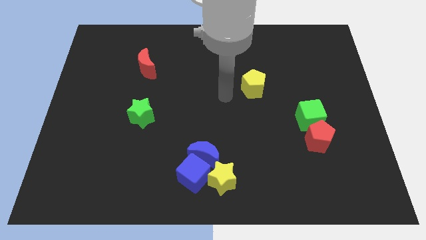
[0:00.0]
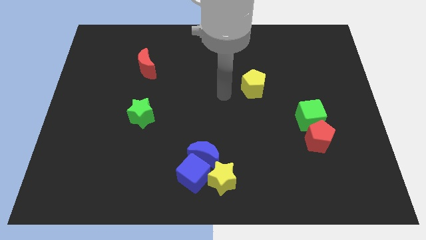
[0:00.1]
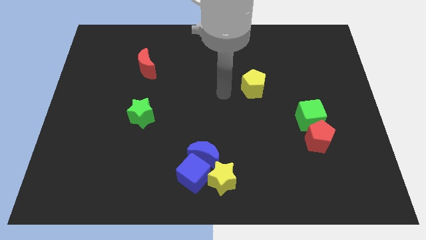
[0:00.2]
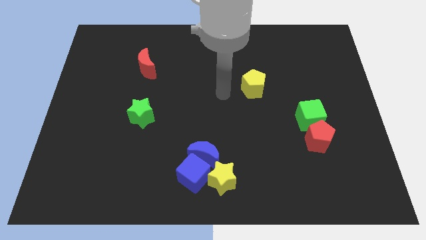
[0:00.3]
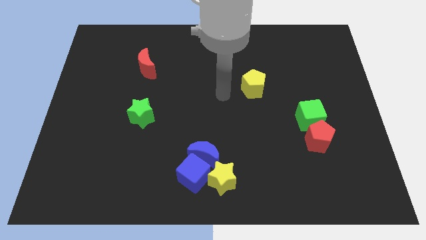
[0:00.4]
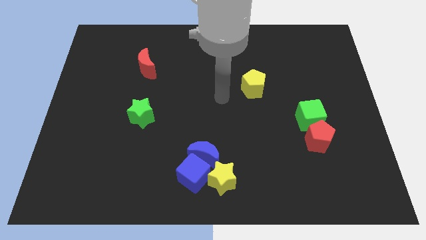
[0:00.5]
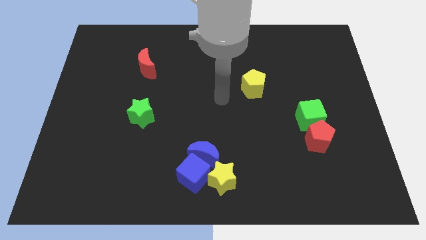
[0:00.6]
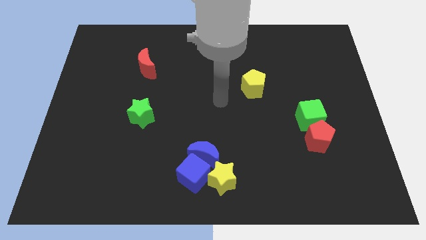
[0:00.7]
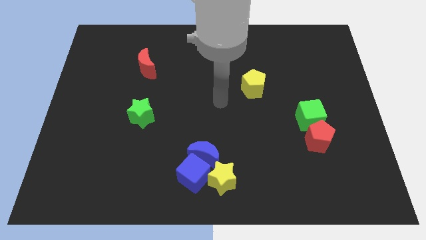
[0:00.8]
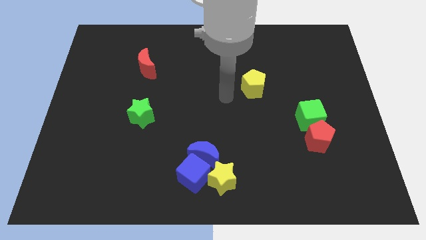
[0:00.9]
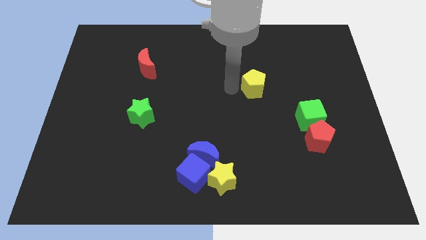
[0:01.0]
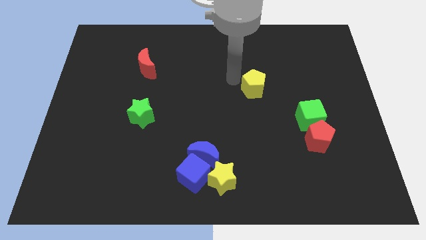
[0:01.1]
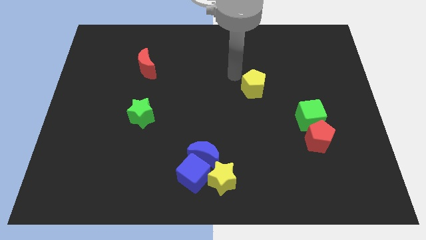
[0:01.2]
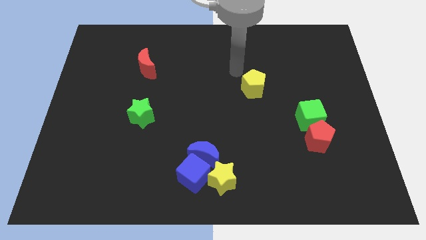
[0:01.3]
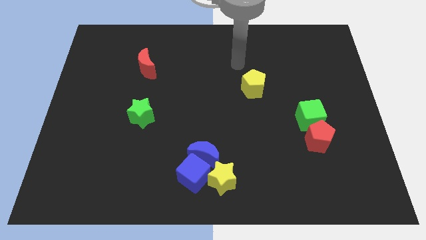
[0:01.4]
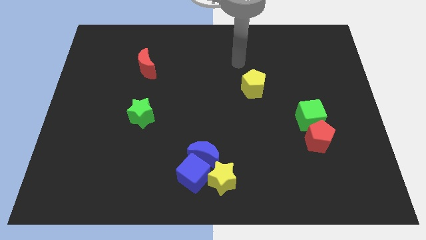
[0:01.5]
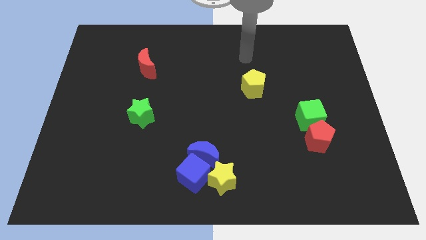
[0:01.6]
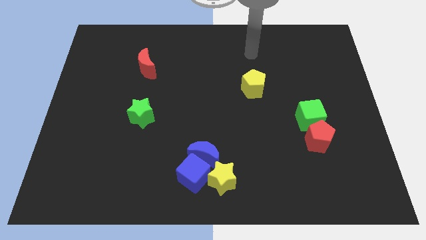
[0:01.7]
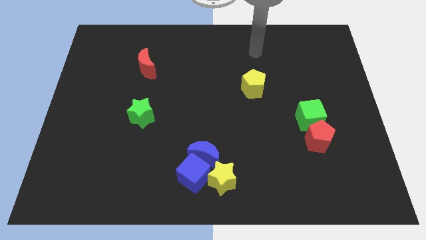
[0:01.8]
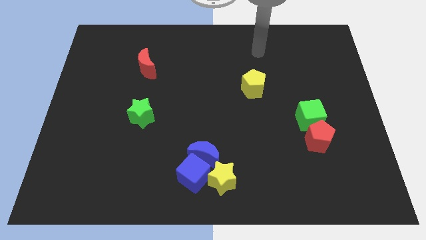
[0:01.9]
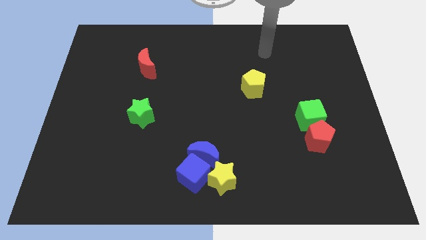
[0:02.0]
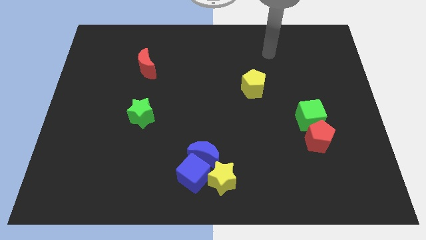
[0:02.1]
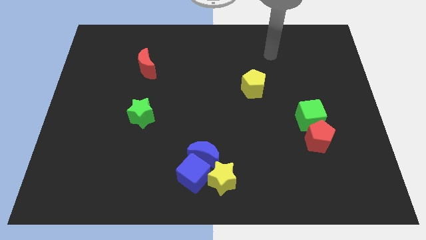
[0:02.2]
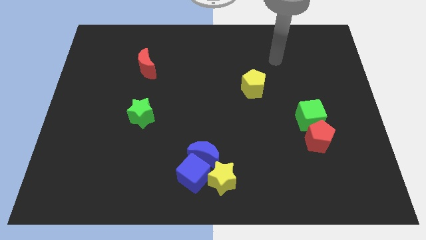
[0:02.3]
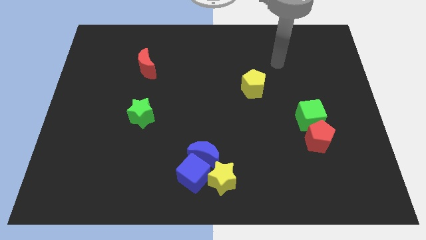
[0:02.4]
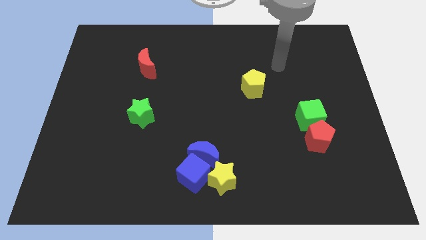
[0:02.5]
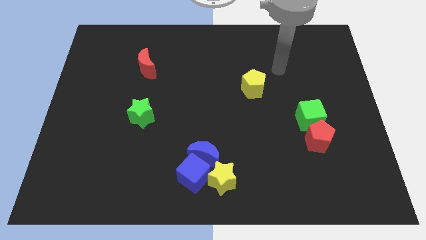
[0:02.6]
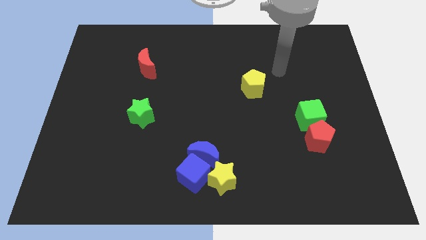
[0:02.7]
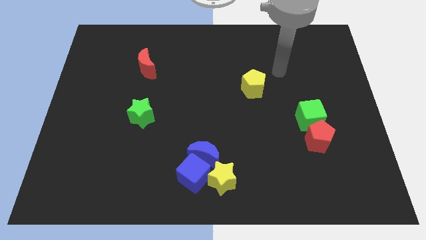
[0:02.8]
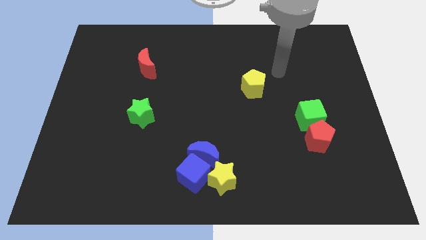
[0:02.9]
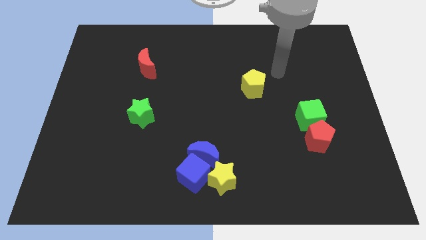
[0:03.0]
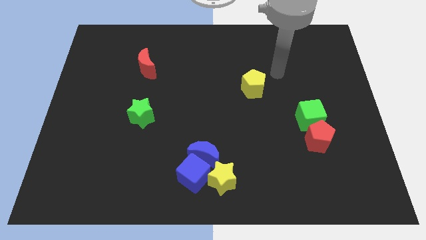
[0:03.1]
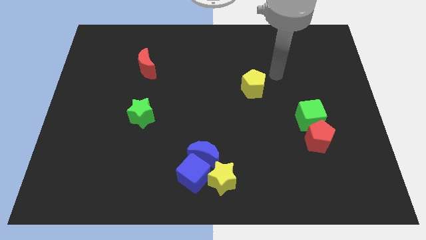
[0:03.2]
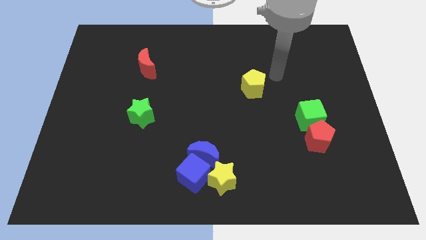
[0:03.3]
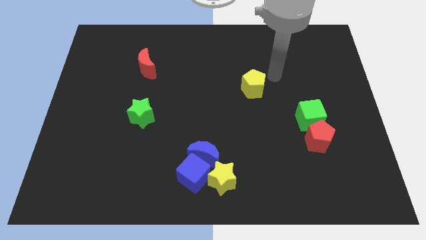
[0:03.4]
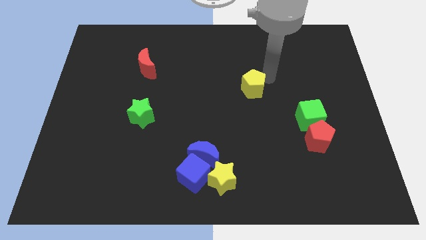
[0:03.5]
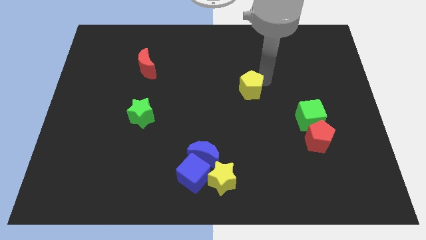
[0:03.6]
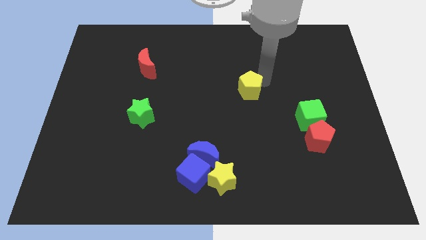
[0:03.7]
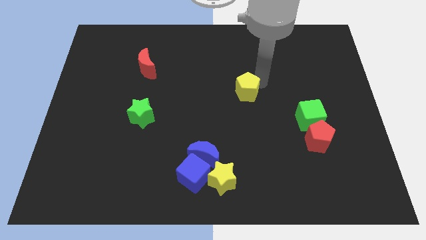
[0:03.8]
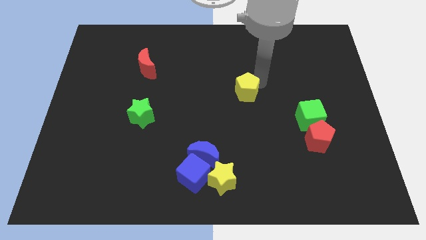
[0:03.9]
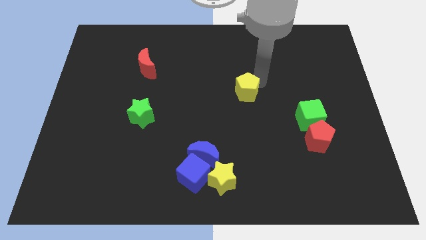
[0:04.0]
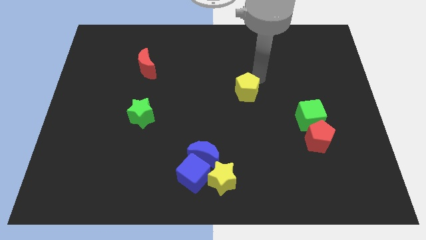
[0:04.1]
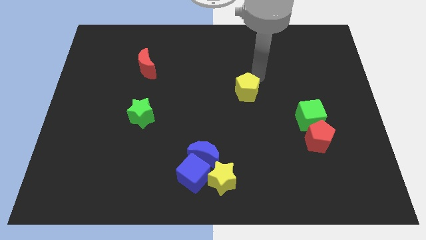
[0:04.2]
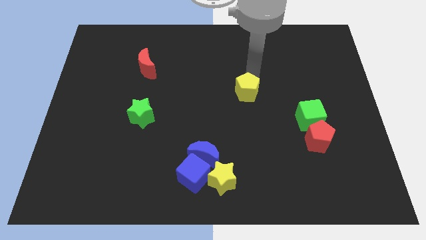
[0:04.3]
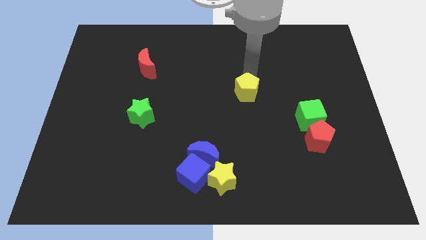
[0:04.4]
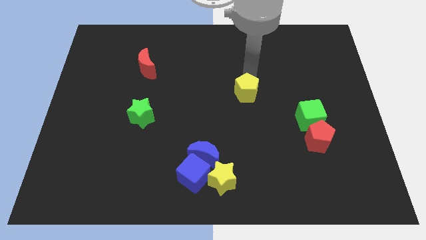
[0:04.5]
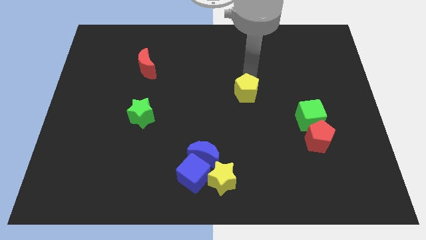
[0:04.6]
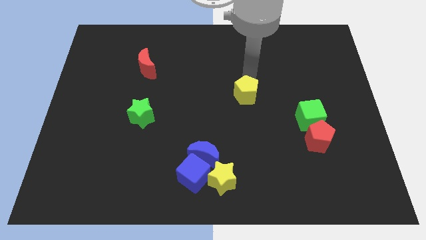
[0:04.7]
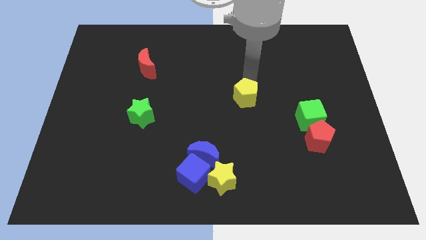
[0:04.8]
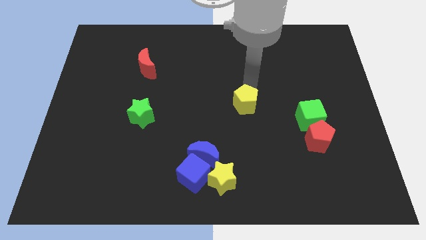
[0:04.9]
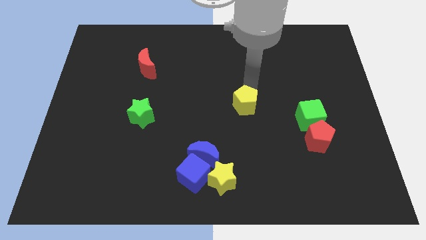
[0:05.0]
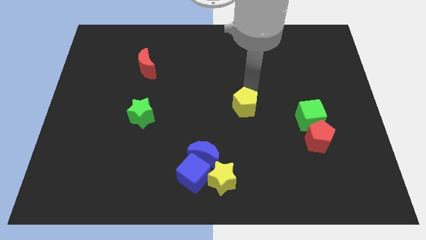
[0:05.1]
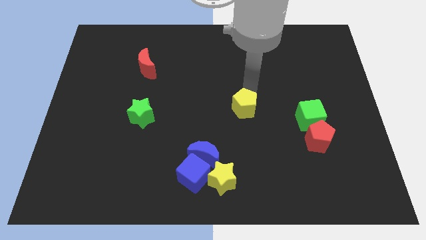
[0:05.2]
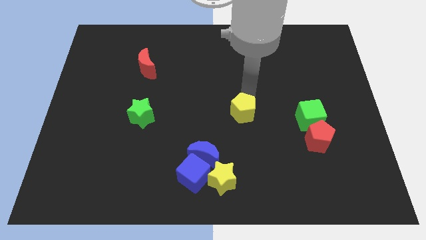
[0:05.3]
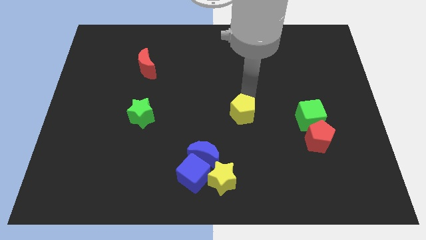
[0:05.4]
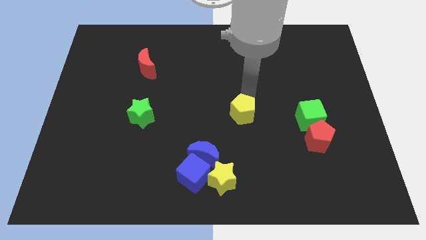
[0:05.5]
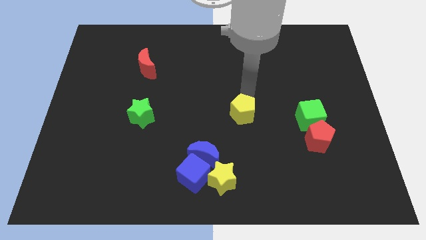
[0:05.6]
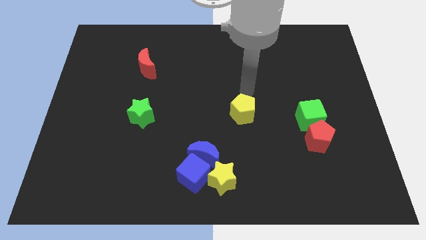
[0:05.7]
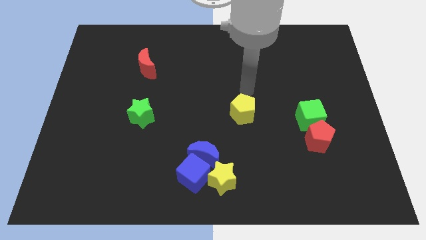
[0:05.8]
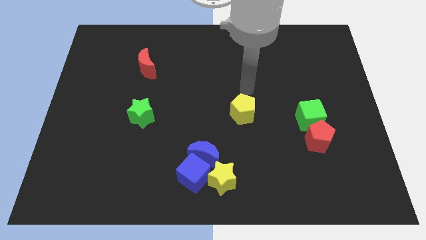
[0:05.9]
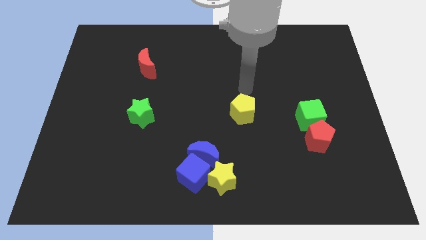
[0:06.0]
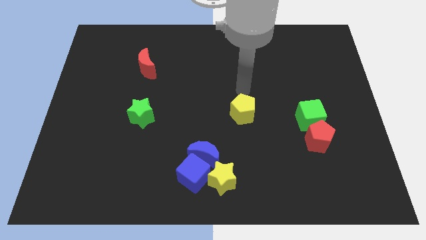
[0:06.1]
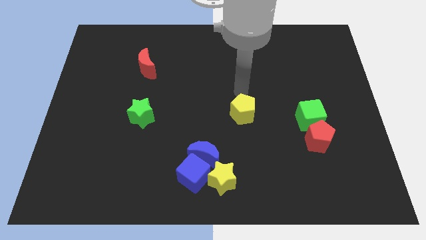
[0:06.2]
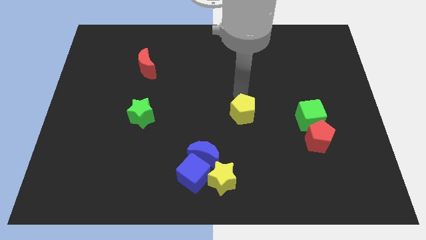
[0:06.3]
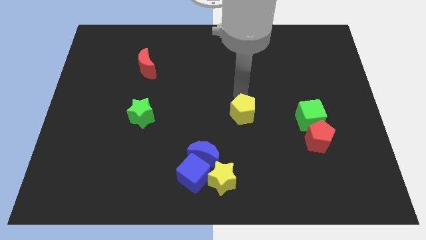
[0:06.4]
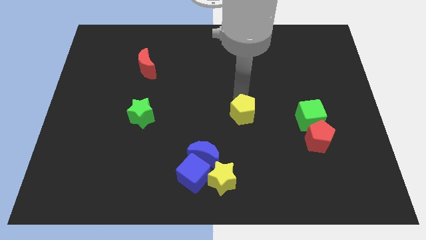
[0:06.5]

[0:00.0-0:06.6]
move the yellow pentagon in between the green star and the green cube

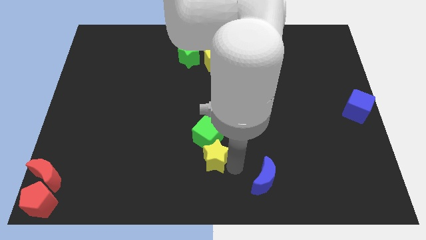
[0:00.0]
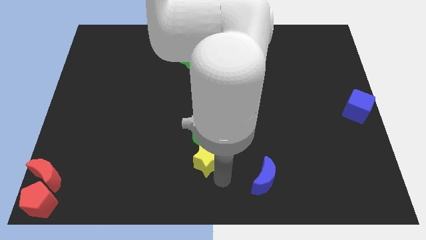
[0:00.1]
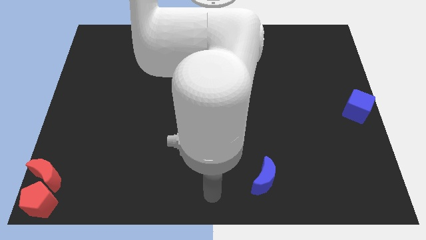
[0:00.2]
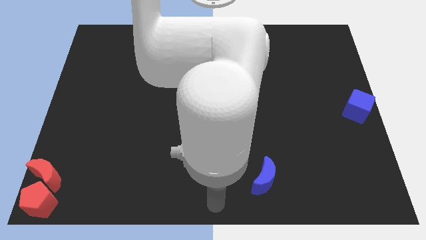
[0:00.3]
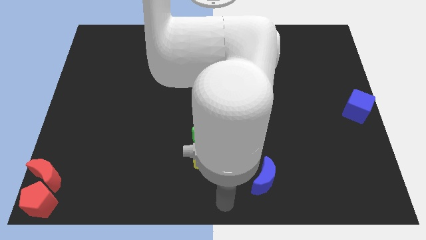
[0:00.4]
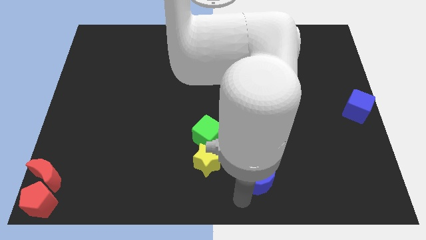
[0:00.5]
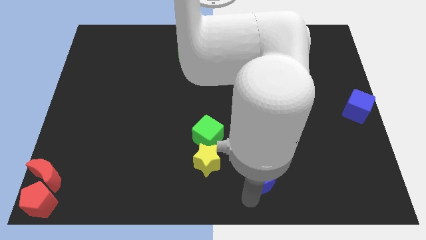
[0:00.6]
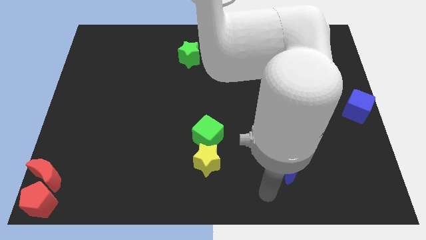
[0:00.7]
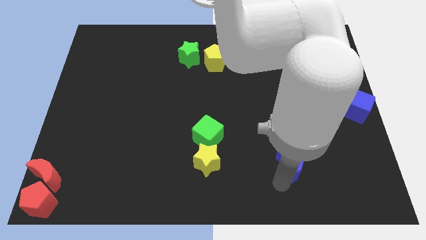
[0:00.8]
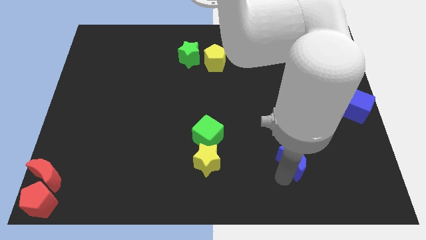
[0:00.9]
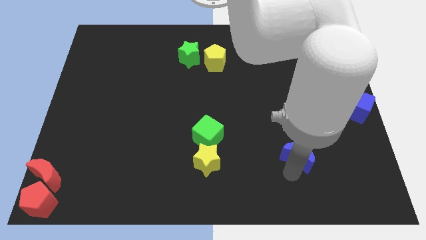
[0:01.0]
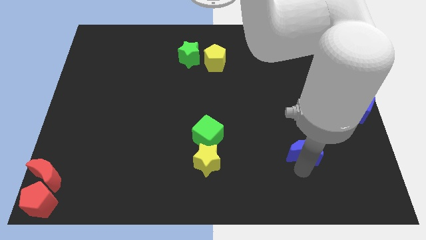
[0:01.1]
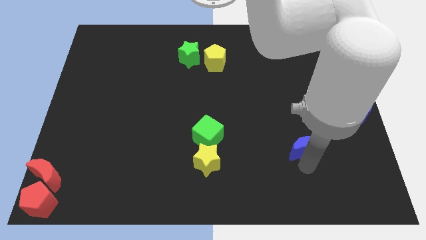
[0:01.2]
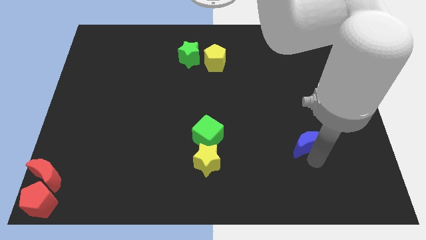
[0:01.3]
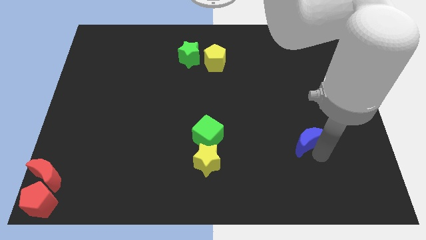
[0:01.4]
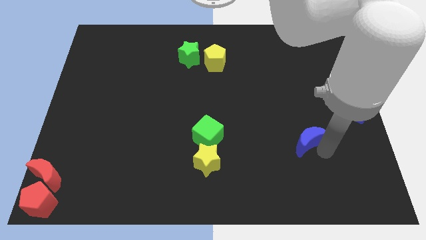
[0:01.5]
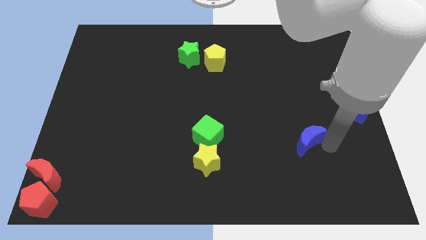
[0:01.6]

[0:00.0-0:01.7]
move the blue crescent slightly towards right center

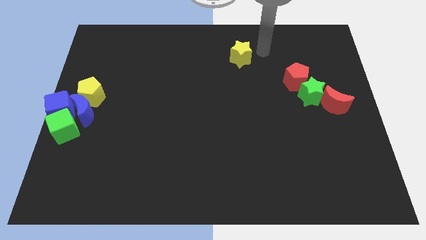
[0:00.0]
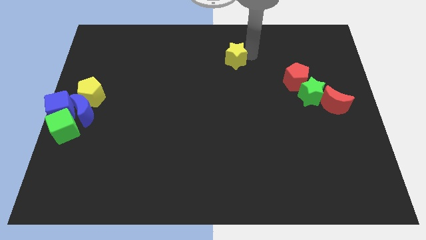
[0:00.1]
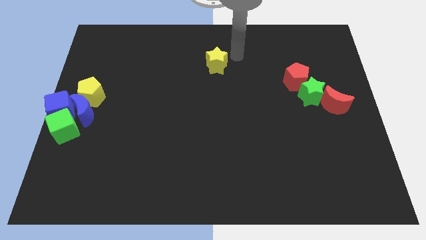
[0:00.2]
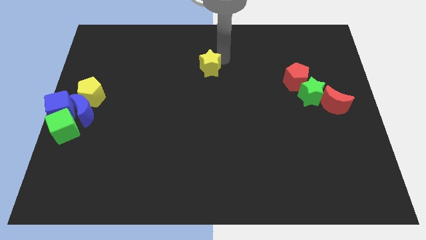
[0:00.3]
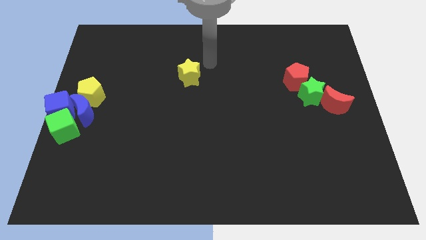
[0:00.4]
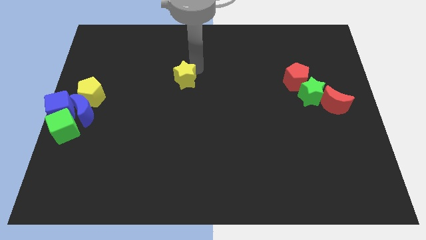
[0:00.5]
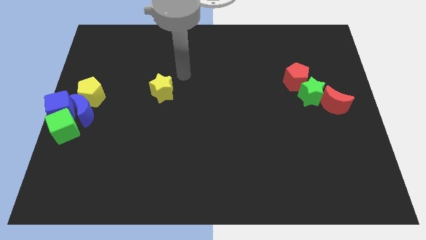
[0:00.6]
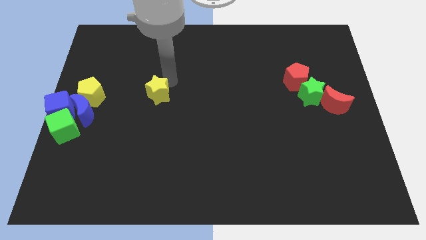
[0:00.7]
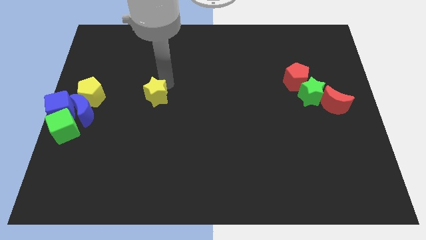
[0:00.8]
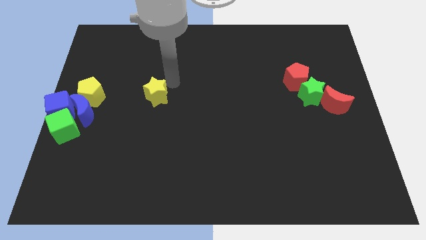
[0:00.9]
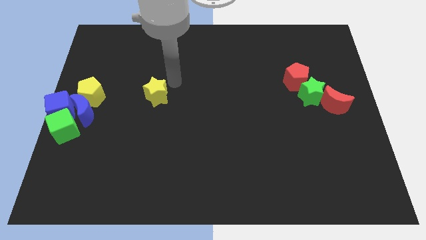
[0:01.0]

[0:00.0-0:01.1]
put yellow star to the right of yellow pentagon
